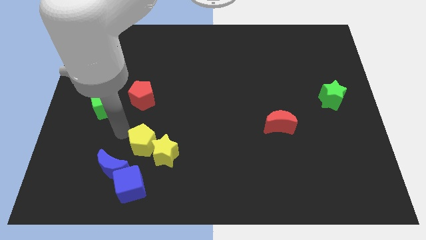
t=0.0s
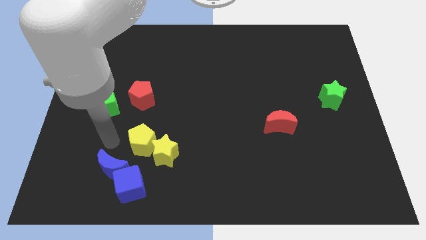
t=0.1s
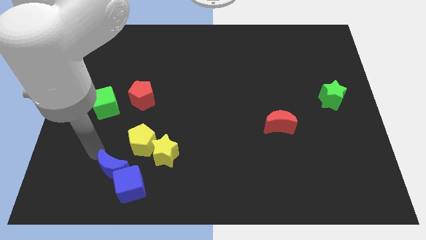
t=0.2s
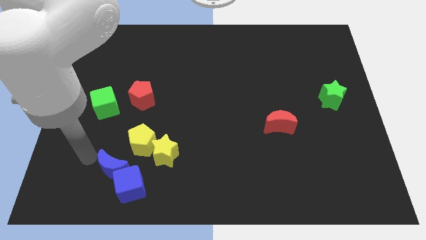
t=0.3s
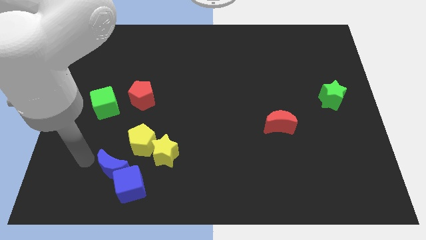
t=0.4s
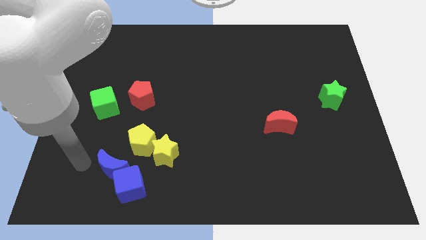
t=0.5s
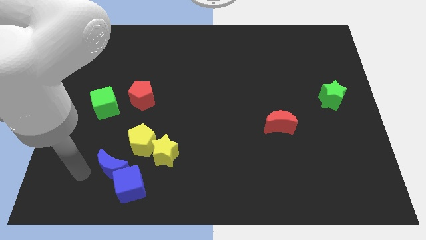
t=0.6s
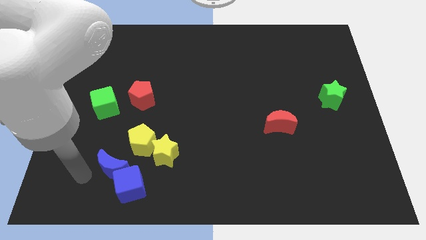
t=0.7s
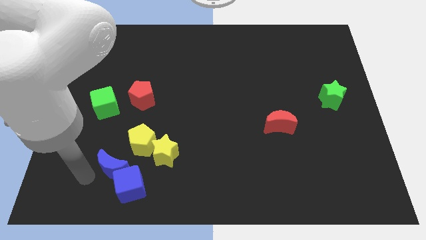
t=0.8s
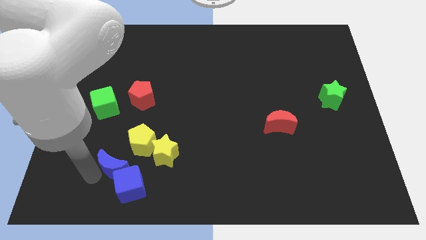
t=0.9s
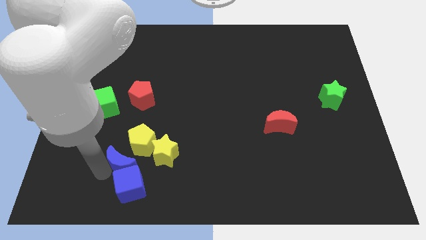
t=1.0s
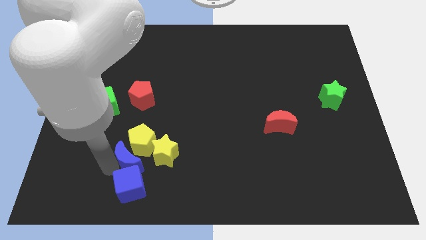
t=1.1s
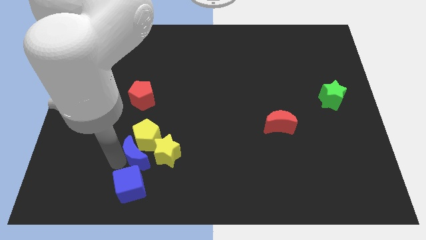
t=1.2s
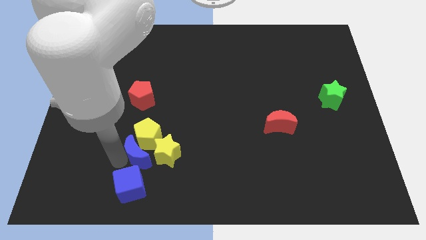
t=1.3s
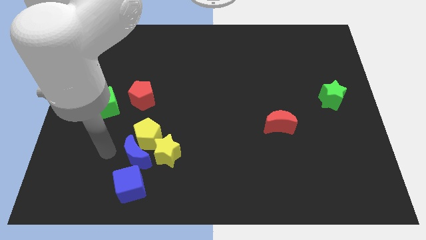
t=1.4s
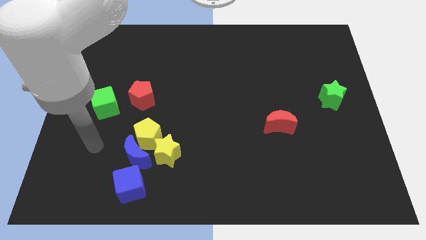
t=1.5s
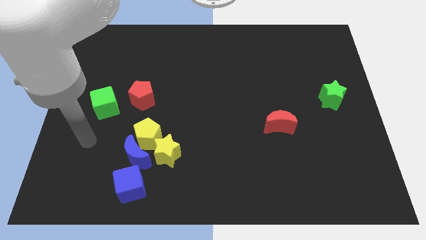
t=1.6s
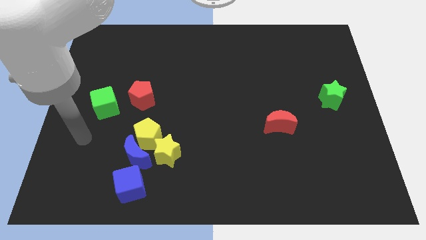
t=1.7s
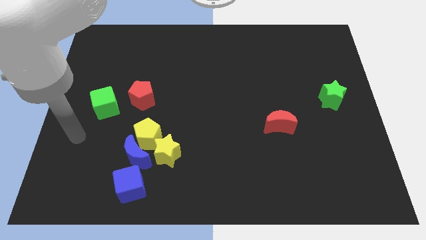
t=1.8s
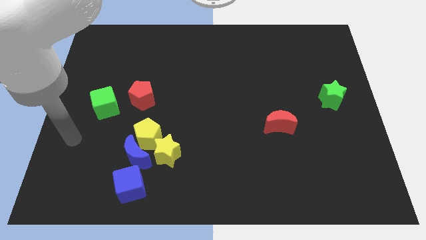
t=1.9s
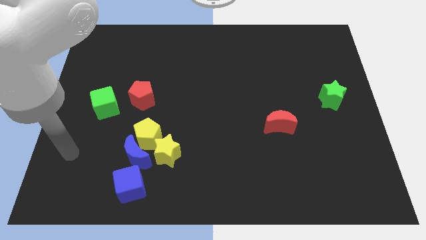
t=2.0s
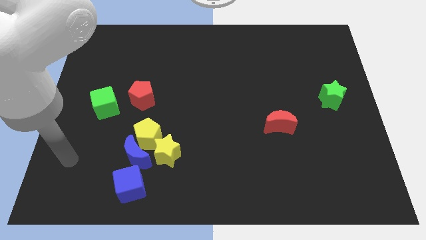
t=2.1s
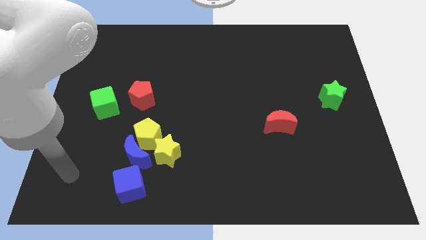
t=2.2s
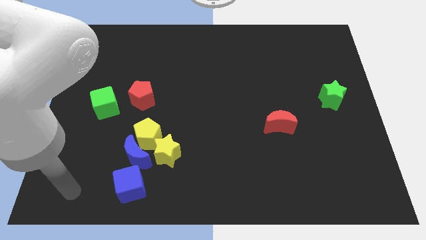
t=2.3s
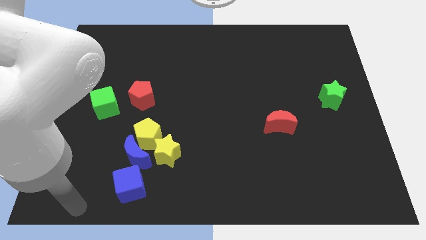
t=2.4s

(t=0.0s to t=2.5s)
move the blue moon towards the yellow pentagon

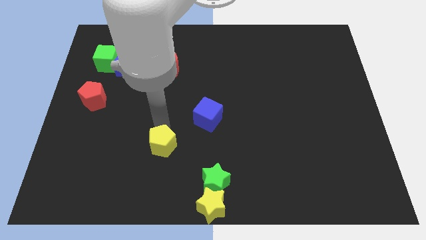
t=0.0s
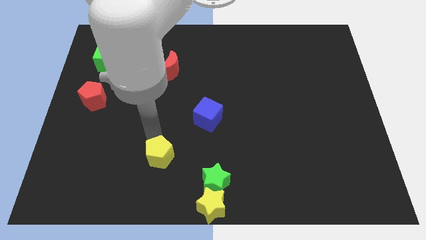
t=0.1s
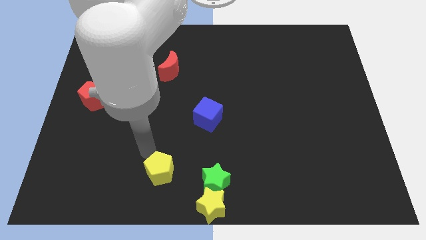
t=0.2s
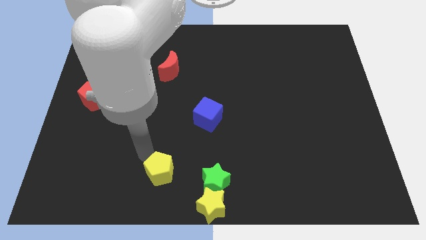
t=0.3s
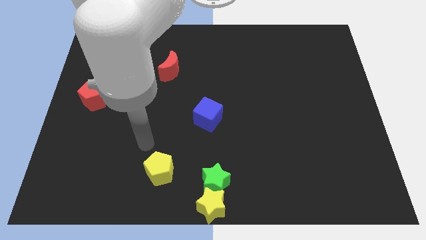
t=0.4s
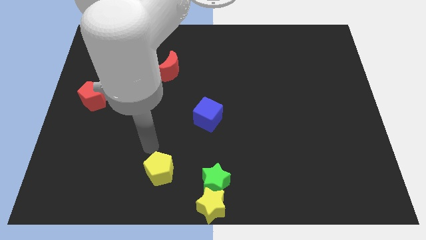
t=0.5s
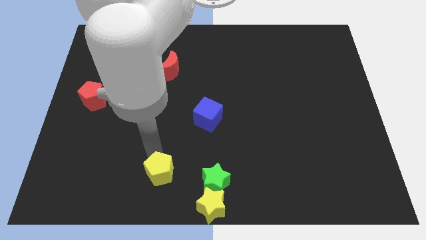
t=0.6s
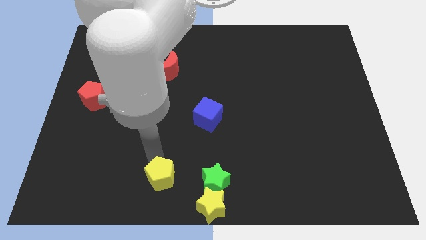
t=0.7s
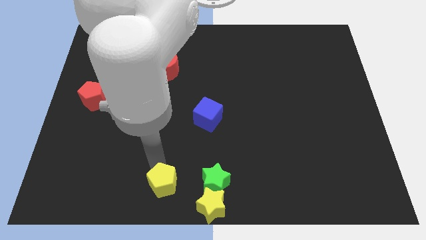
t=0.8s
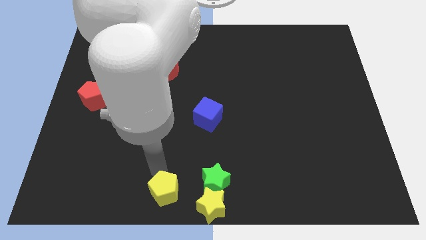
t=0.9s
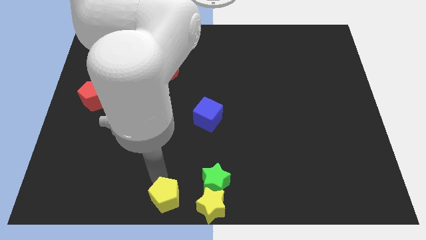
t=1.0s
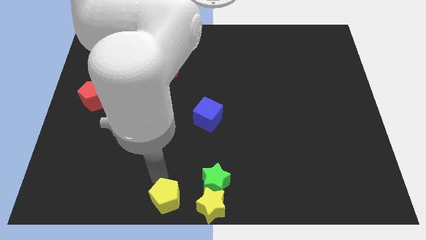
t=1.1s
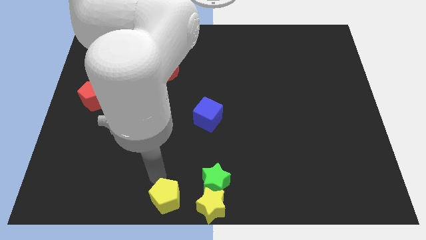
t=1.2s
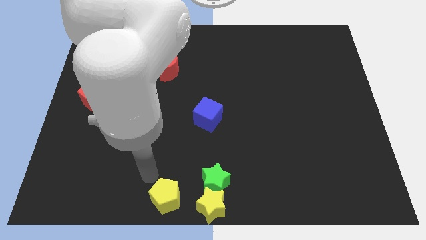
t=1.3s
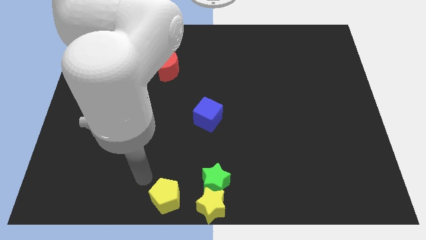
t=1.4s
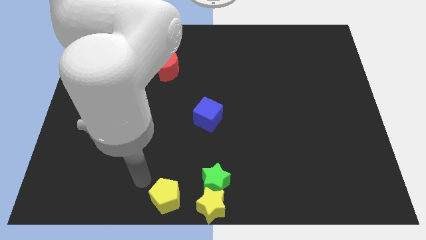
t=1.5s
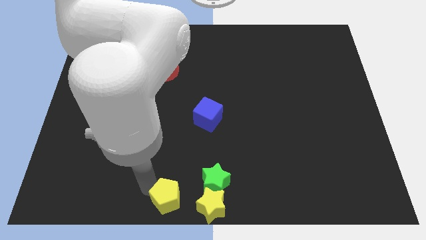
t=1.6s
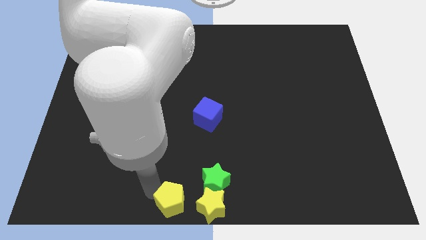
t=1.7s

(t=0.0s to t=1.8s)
push the yellow pentagon to the left of the yellow star

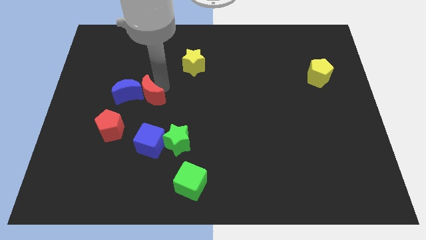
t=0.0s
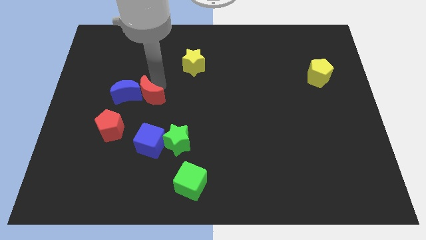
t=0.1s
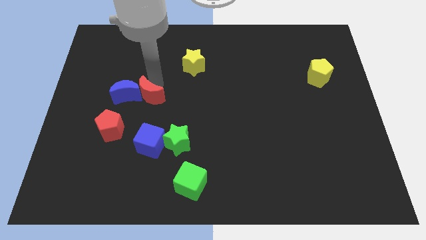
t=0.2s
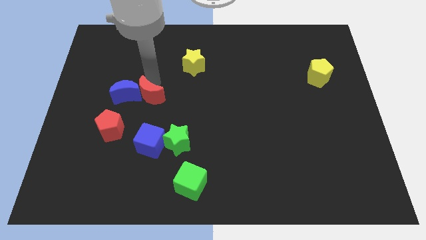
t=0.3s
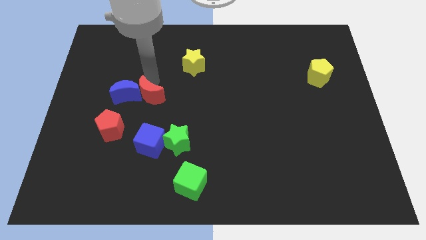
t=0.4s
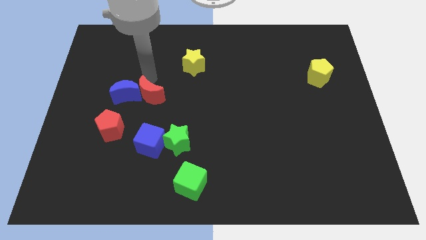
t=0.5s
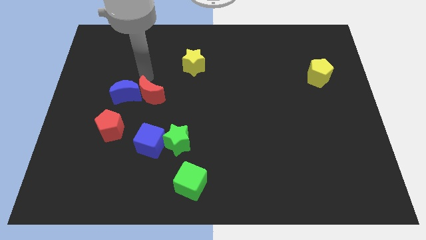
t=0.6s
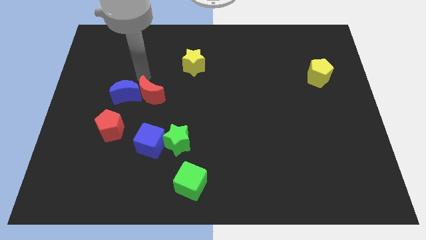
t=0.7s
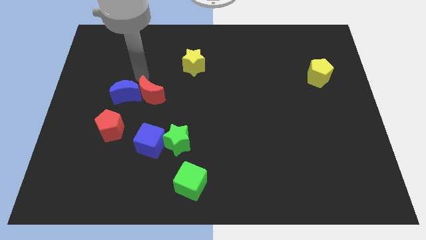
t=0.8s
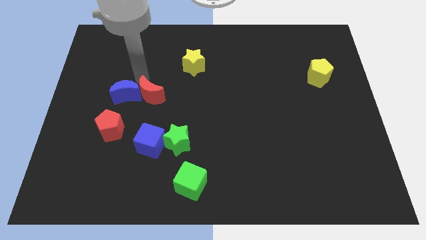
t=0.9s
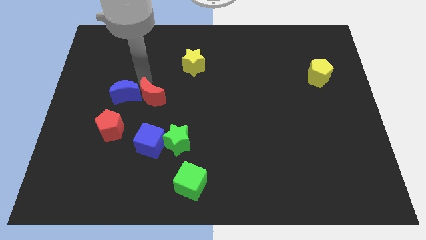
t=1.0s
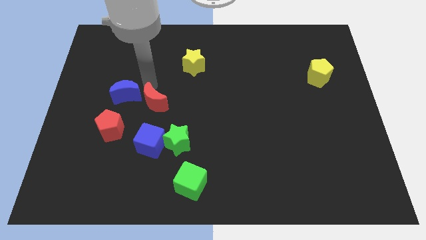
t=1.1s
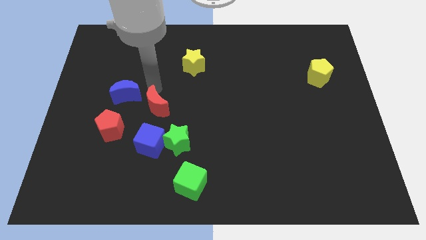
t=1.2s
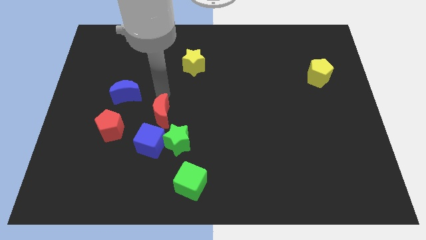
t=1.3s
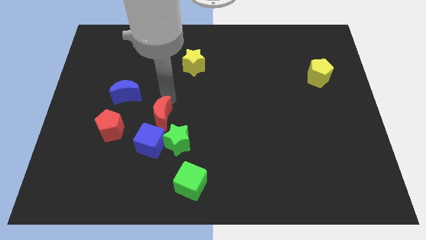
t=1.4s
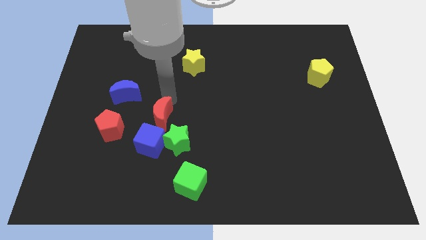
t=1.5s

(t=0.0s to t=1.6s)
push red crescent to the top of the blue cube

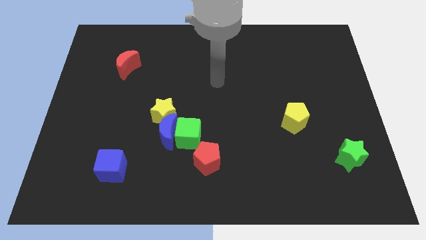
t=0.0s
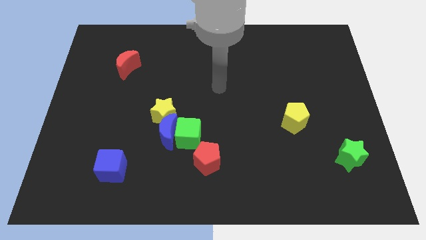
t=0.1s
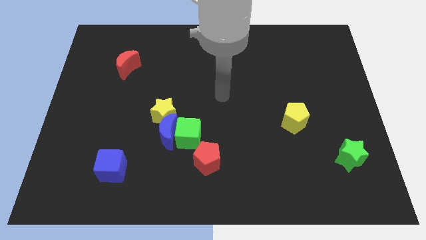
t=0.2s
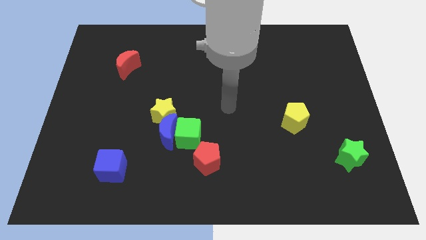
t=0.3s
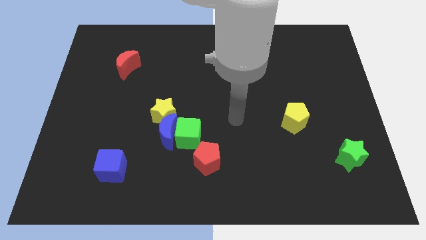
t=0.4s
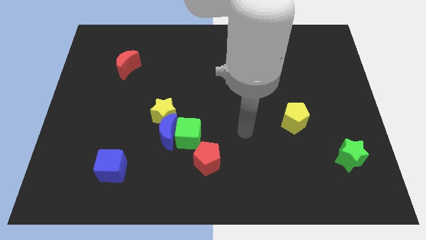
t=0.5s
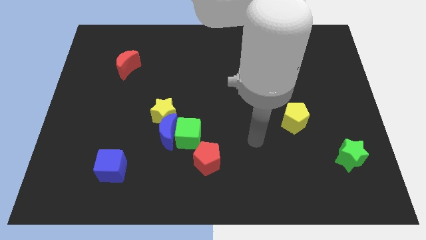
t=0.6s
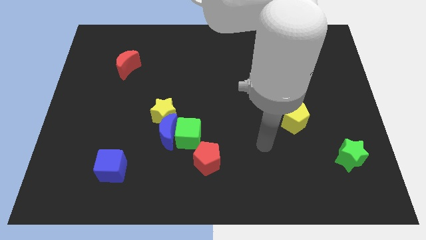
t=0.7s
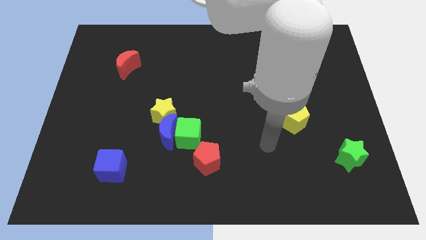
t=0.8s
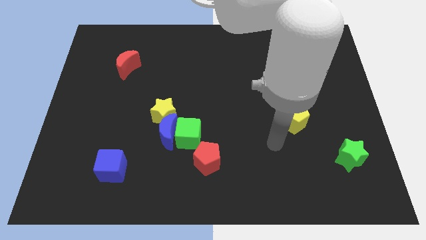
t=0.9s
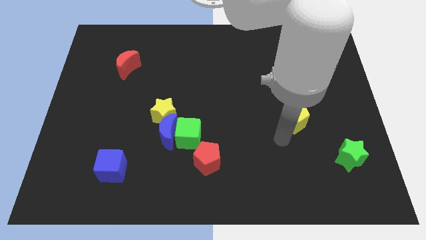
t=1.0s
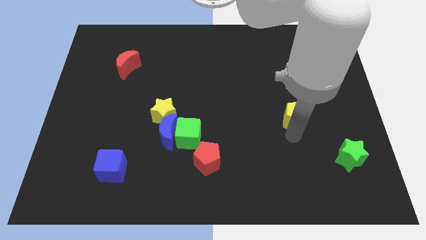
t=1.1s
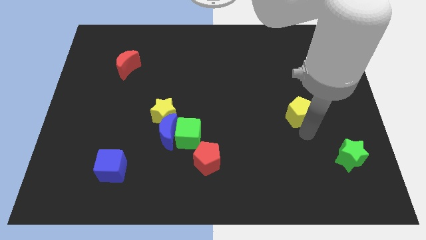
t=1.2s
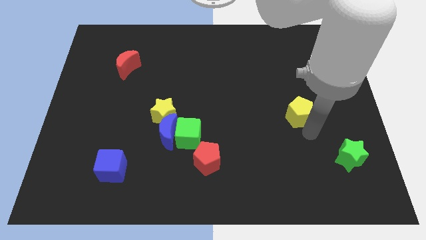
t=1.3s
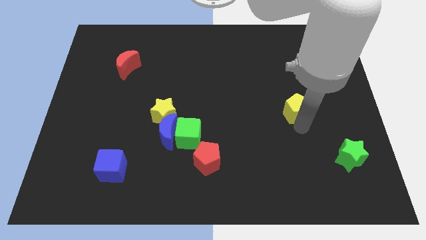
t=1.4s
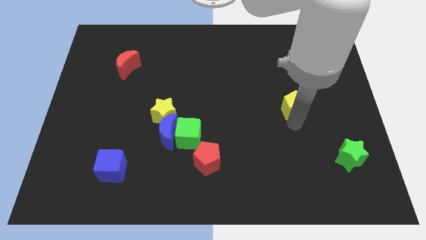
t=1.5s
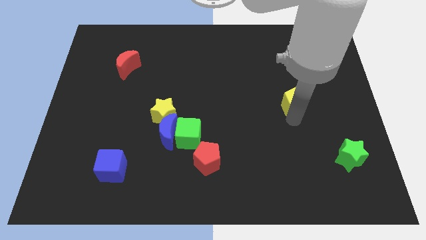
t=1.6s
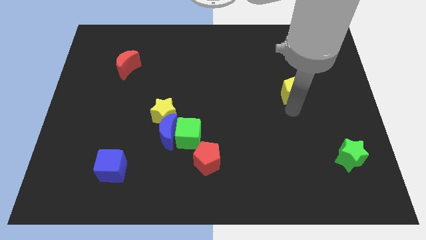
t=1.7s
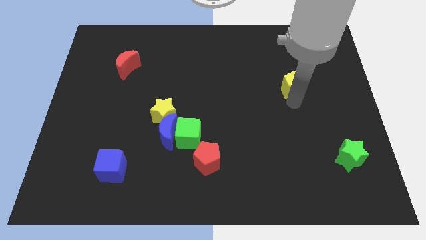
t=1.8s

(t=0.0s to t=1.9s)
slightly push the yellow pentagon upwards

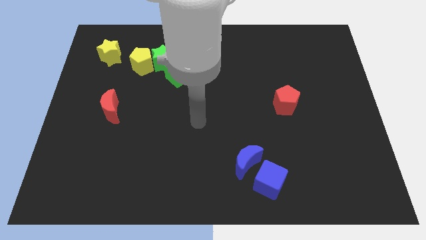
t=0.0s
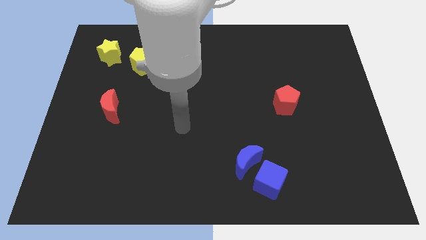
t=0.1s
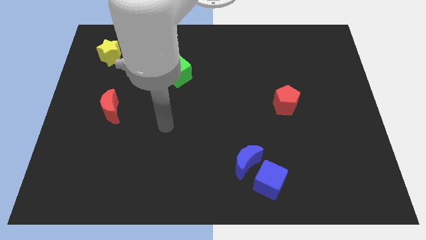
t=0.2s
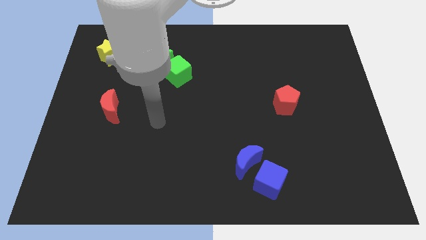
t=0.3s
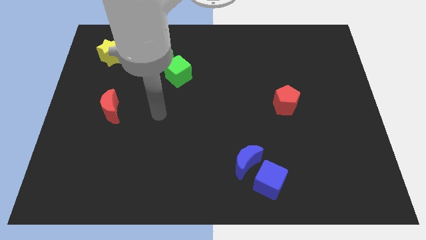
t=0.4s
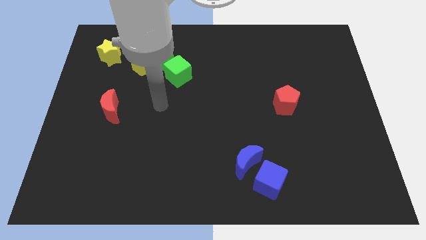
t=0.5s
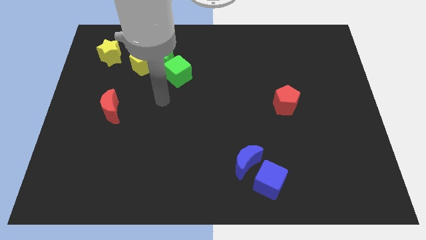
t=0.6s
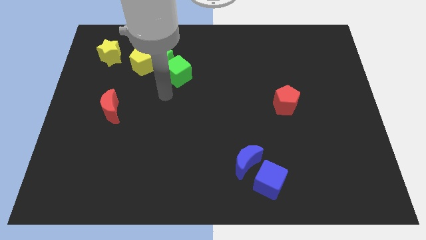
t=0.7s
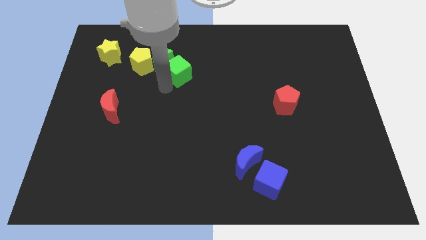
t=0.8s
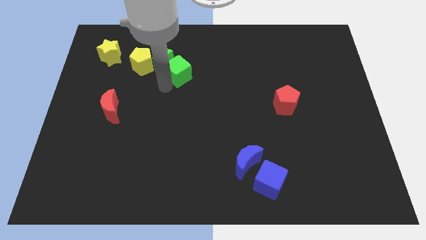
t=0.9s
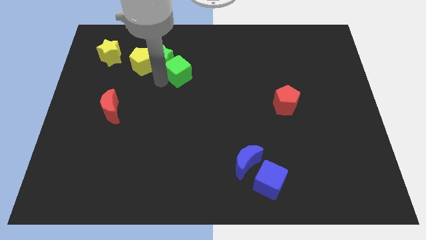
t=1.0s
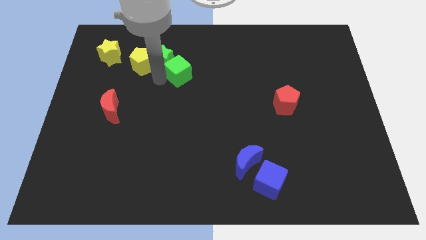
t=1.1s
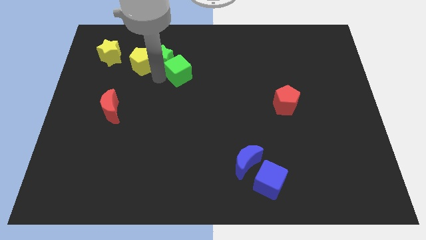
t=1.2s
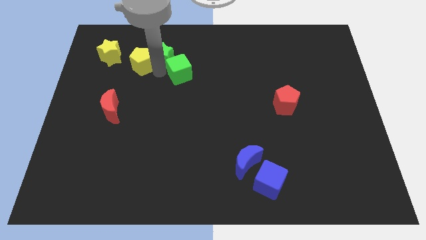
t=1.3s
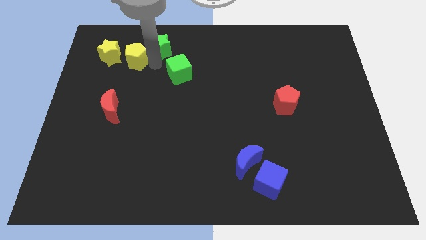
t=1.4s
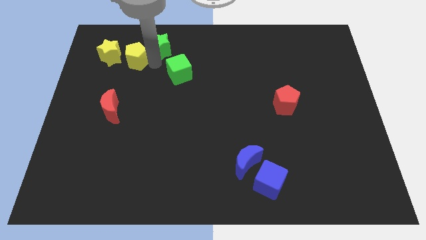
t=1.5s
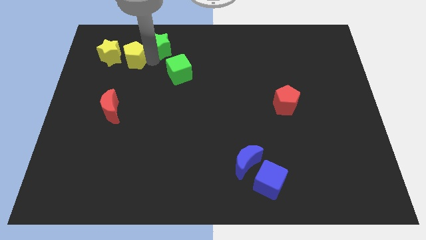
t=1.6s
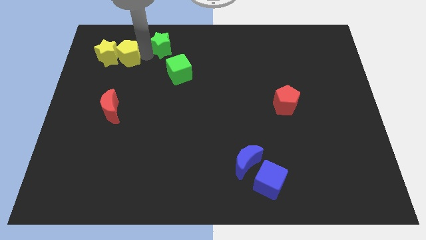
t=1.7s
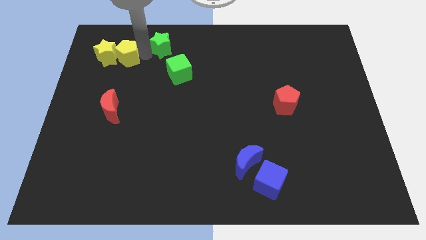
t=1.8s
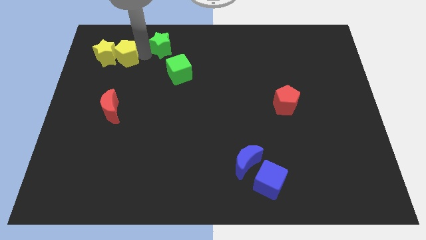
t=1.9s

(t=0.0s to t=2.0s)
place your arm in between the yellow pentagon and the green star
